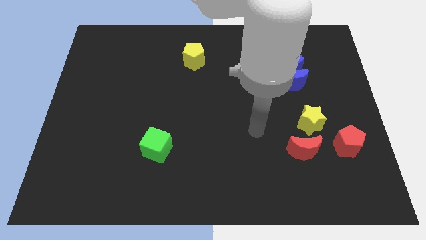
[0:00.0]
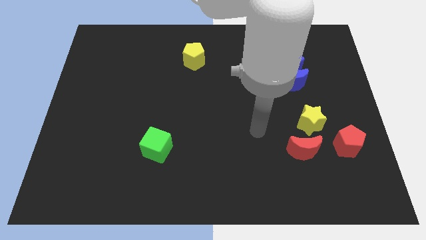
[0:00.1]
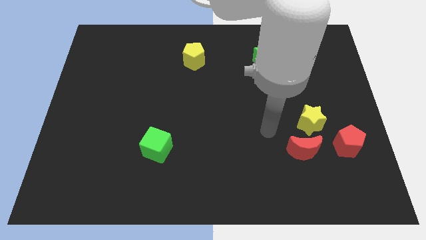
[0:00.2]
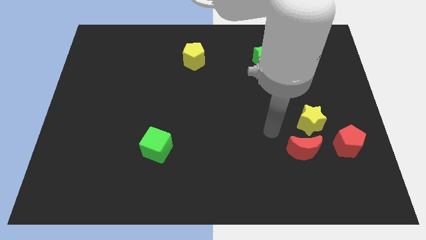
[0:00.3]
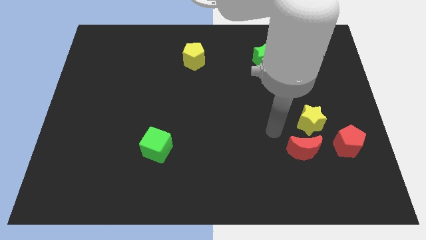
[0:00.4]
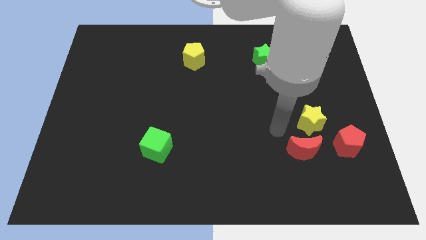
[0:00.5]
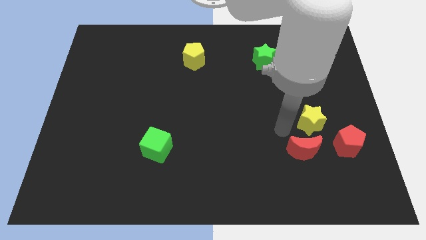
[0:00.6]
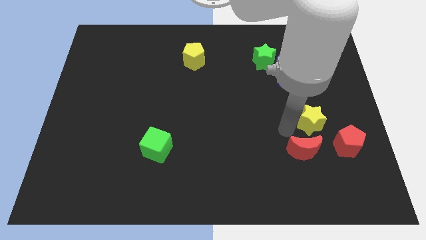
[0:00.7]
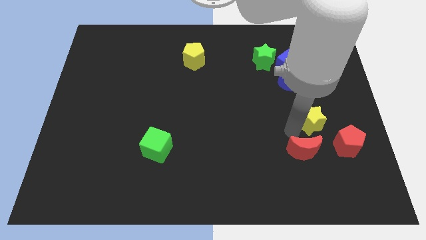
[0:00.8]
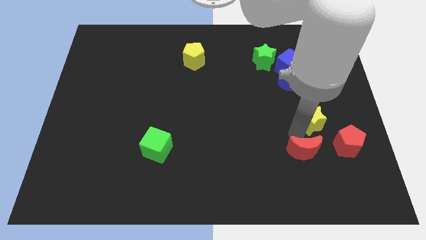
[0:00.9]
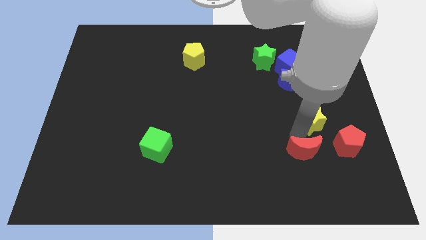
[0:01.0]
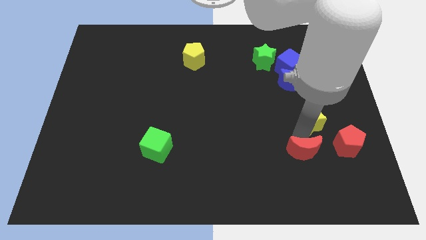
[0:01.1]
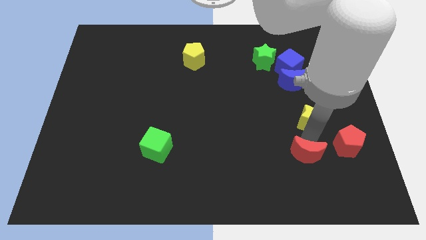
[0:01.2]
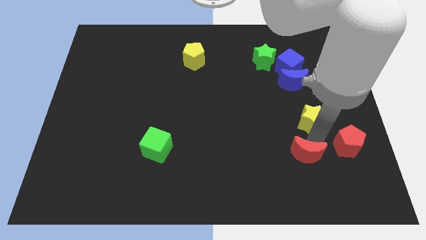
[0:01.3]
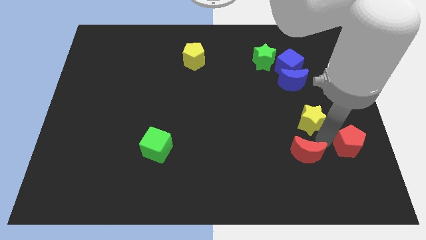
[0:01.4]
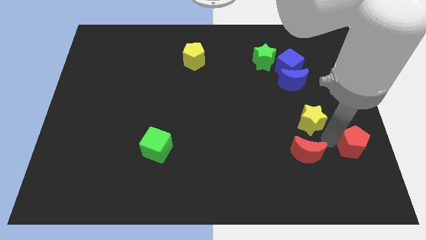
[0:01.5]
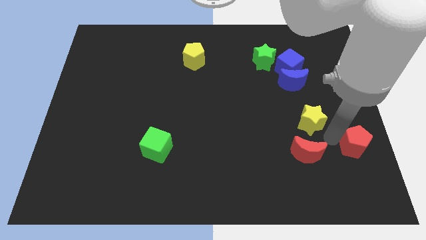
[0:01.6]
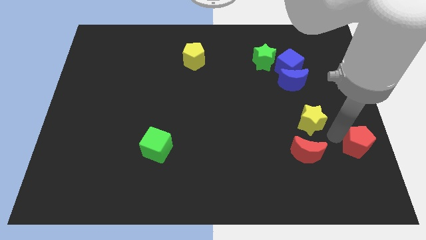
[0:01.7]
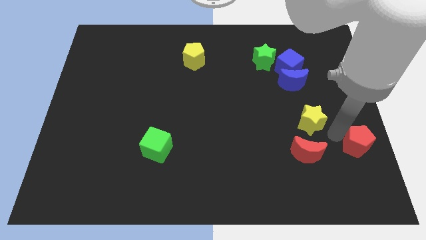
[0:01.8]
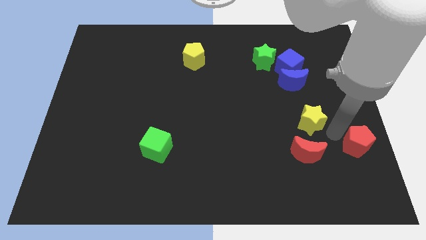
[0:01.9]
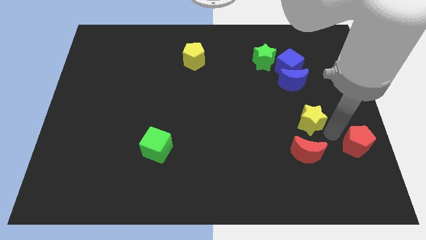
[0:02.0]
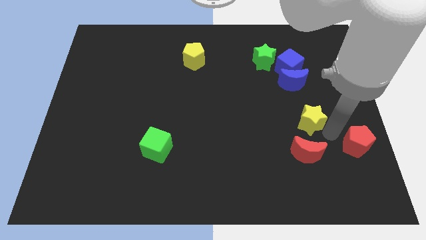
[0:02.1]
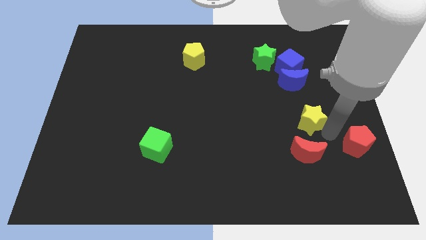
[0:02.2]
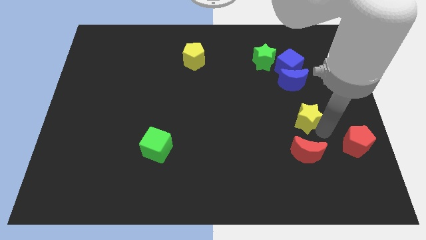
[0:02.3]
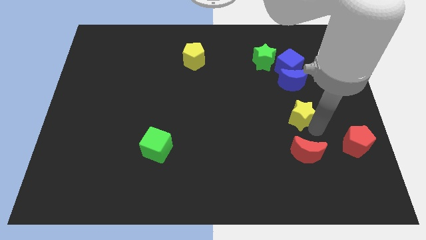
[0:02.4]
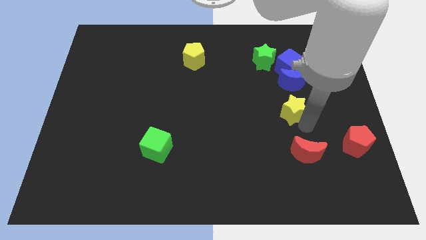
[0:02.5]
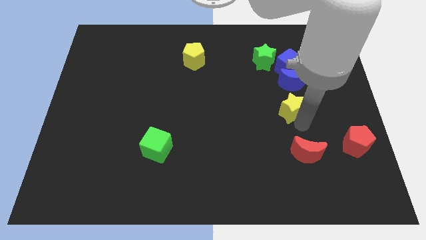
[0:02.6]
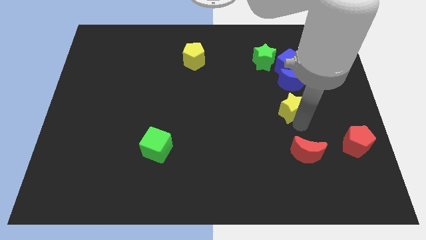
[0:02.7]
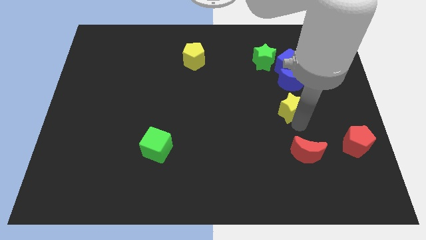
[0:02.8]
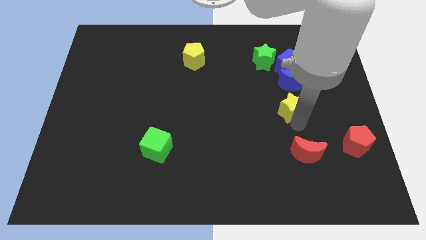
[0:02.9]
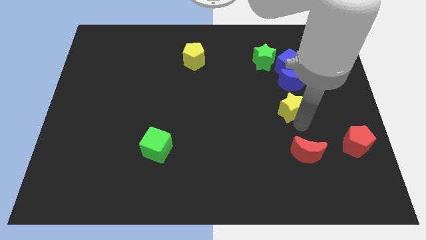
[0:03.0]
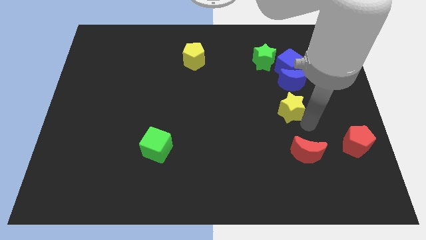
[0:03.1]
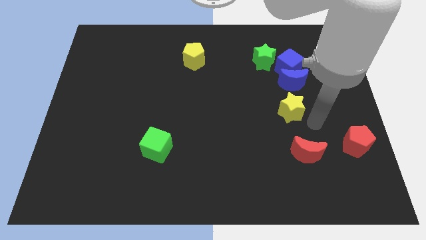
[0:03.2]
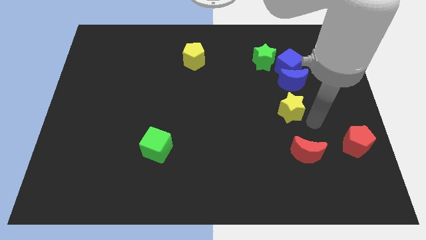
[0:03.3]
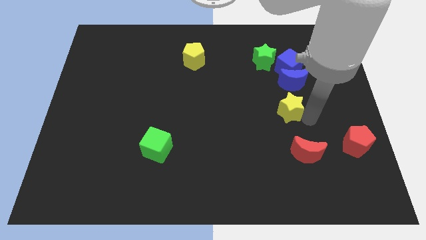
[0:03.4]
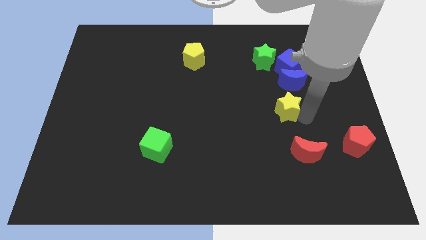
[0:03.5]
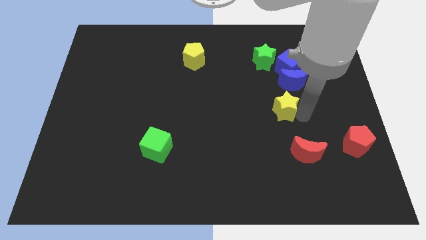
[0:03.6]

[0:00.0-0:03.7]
place the yellow star below the blue crescent

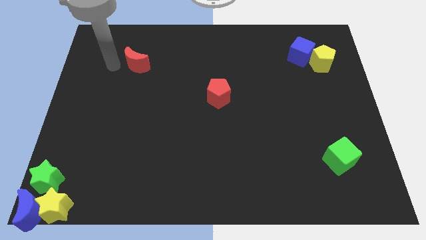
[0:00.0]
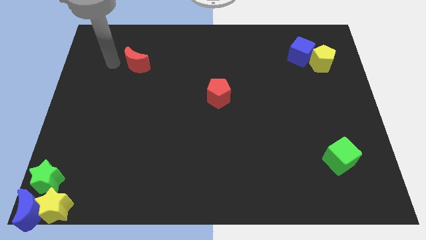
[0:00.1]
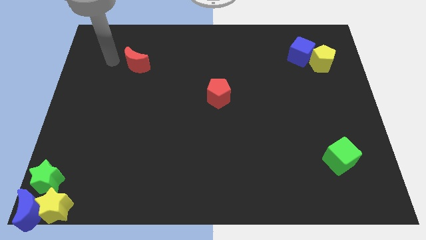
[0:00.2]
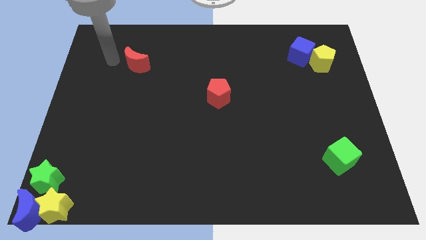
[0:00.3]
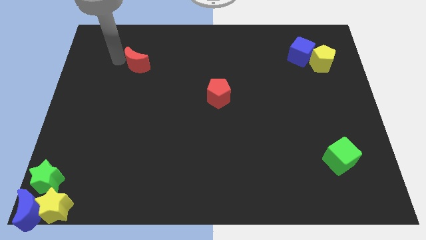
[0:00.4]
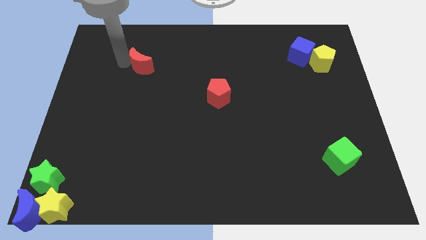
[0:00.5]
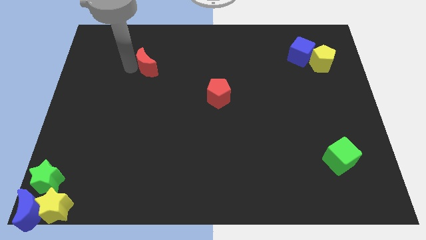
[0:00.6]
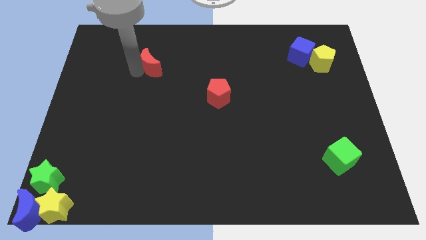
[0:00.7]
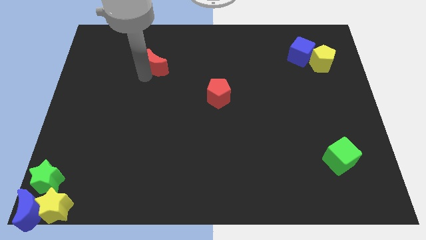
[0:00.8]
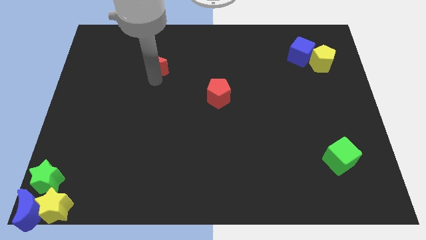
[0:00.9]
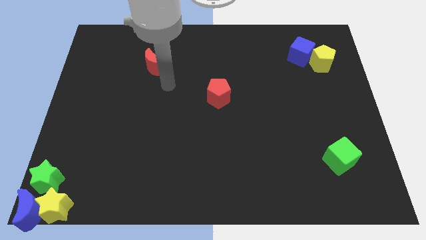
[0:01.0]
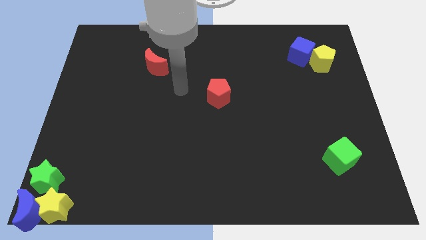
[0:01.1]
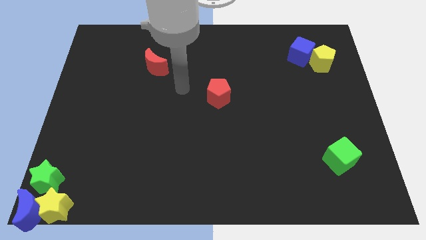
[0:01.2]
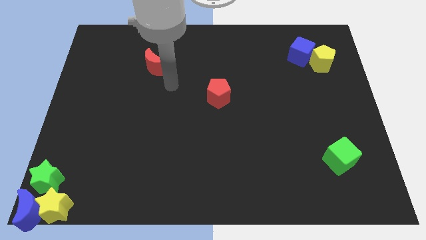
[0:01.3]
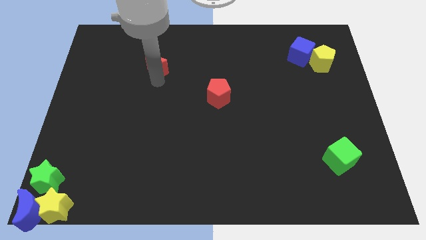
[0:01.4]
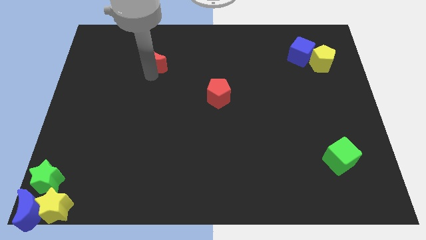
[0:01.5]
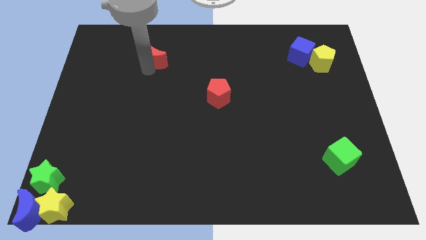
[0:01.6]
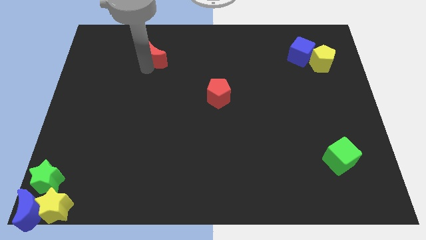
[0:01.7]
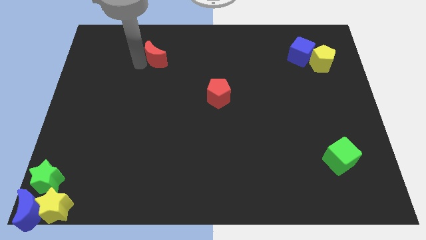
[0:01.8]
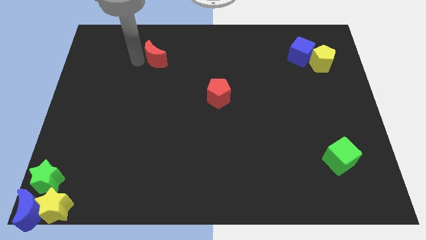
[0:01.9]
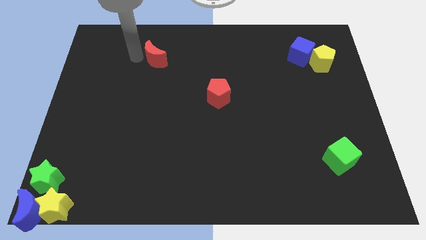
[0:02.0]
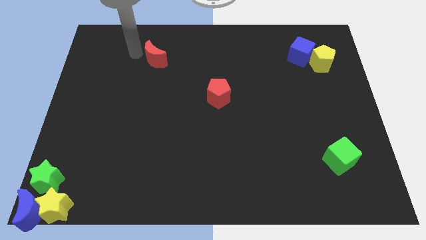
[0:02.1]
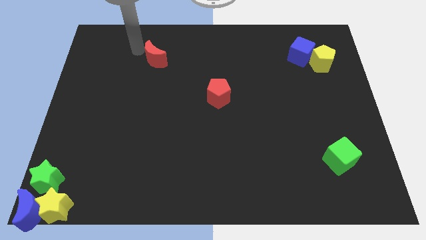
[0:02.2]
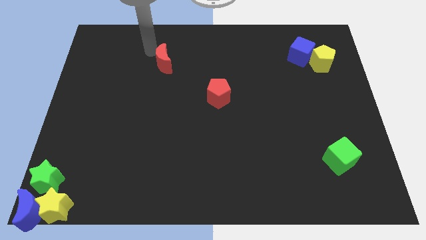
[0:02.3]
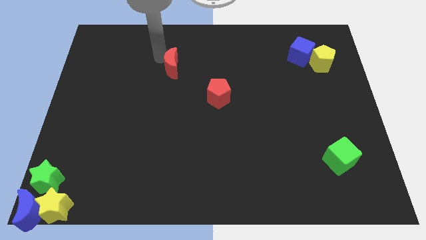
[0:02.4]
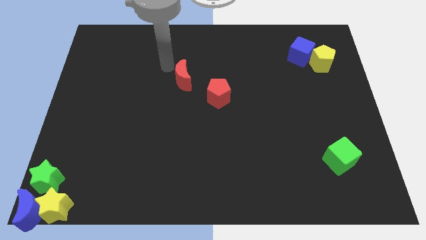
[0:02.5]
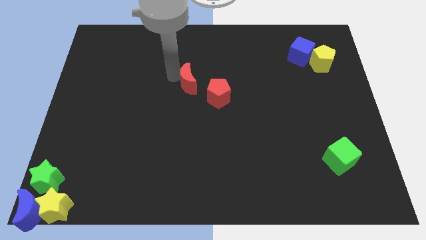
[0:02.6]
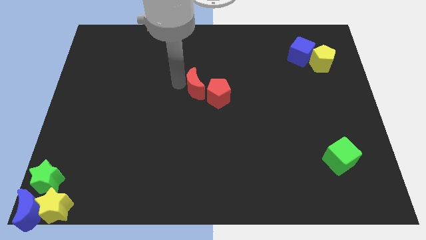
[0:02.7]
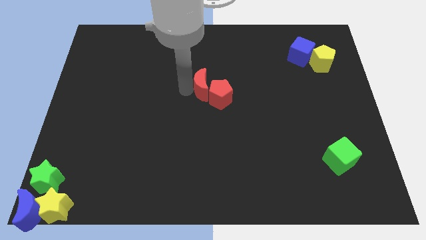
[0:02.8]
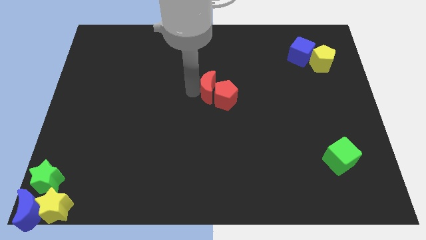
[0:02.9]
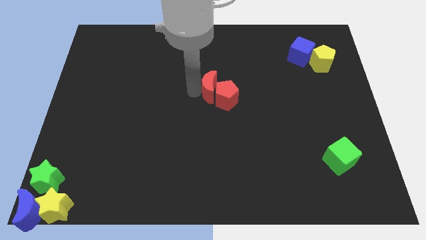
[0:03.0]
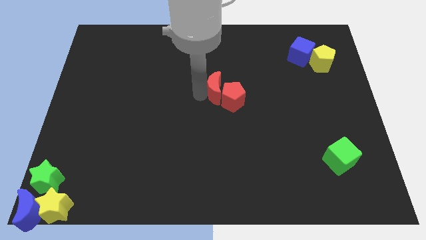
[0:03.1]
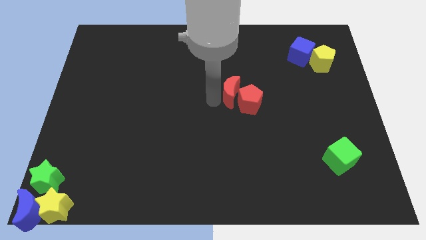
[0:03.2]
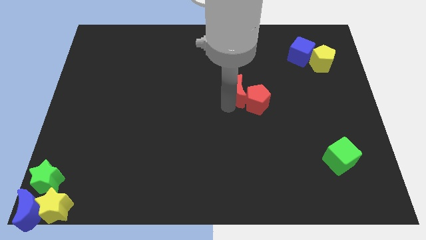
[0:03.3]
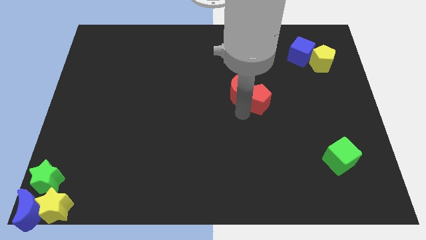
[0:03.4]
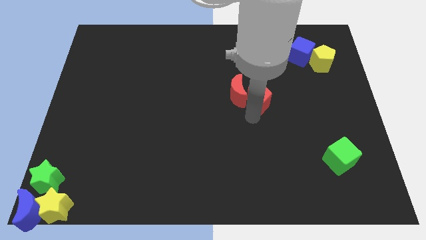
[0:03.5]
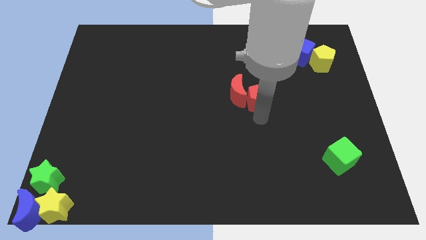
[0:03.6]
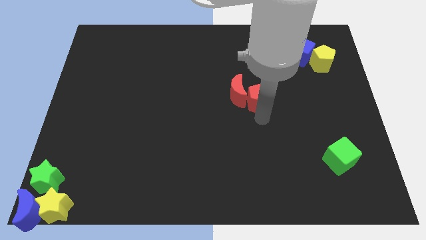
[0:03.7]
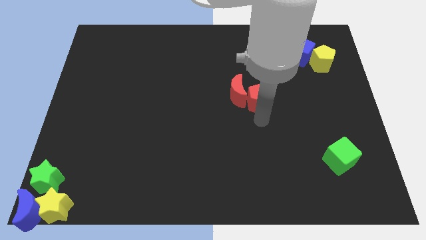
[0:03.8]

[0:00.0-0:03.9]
group up the red blocks diagonal to the green cube

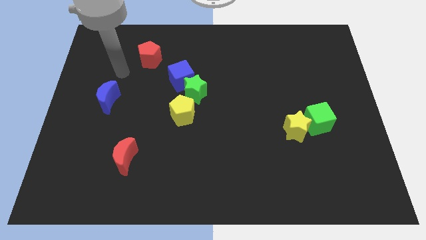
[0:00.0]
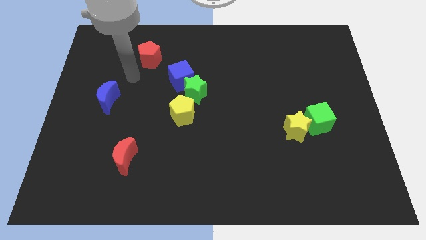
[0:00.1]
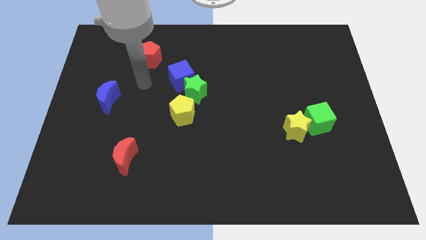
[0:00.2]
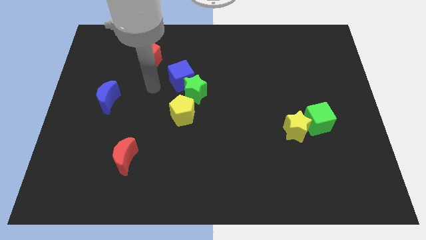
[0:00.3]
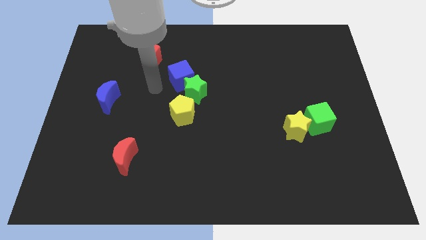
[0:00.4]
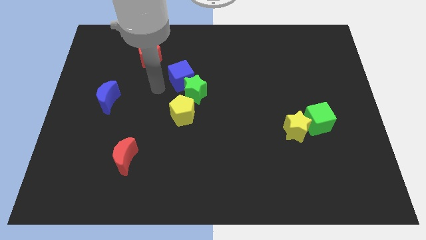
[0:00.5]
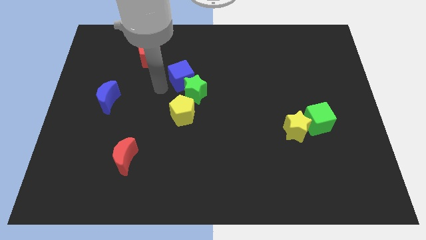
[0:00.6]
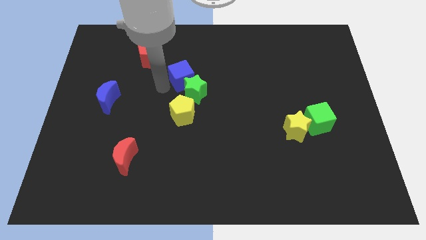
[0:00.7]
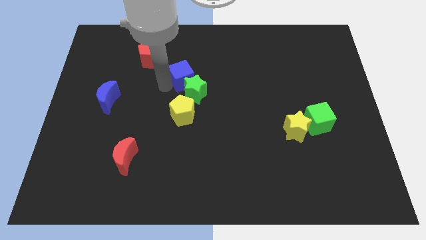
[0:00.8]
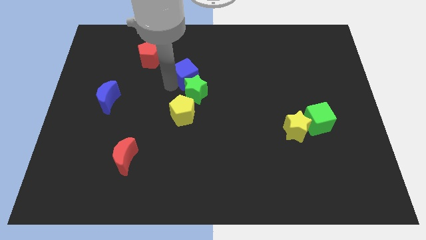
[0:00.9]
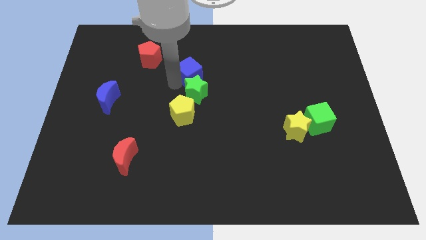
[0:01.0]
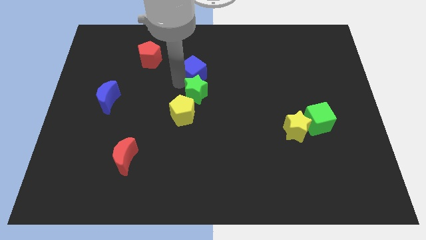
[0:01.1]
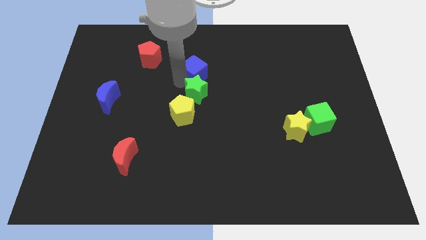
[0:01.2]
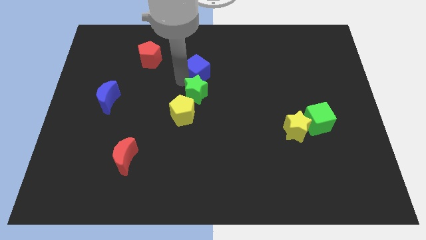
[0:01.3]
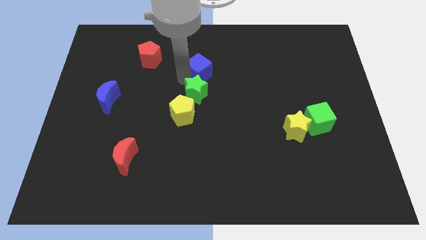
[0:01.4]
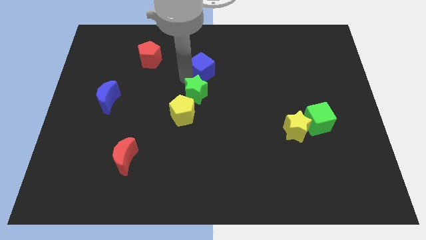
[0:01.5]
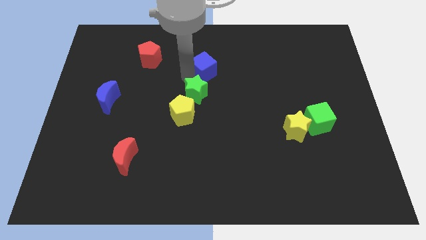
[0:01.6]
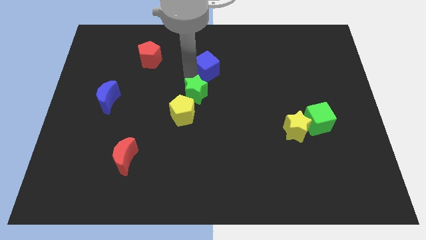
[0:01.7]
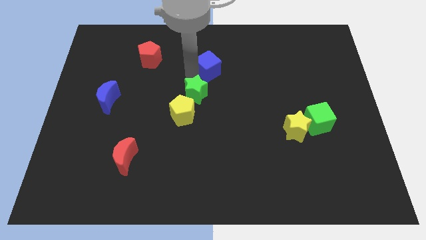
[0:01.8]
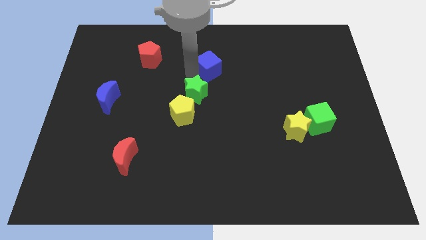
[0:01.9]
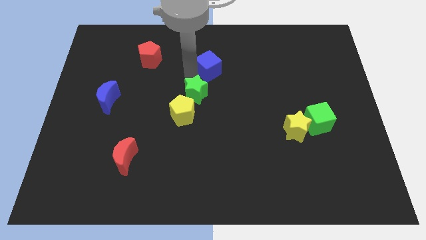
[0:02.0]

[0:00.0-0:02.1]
slide the blue cube towards the top right of the green star
